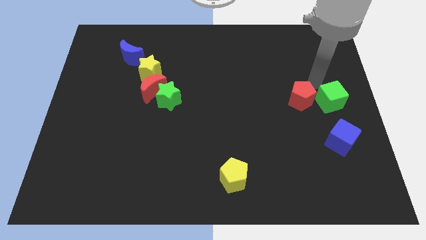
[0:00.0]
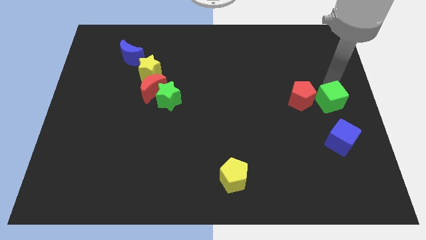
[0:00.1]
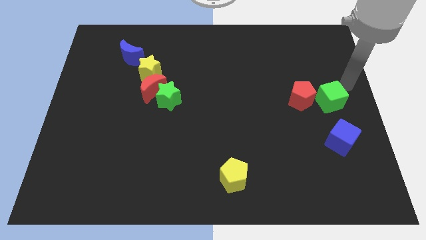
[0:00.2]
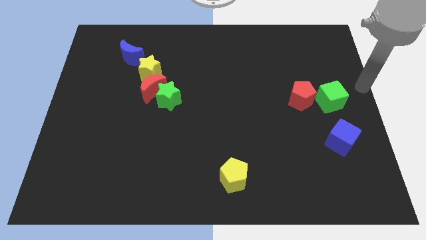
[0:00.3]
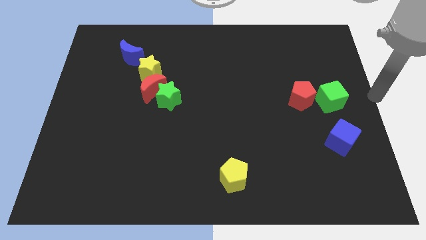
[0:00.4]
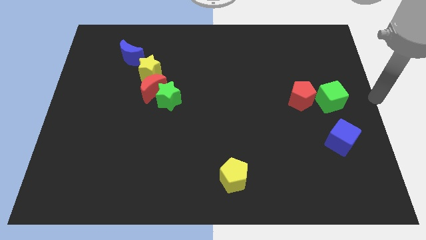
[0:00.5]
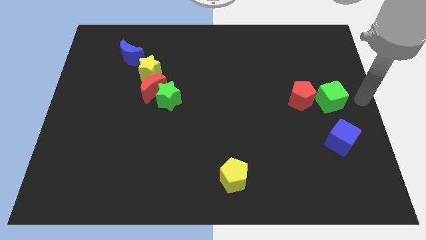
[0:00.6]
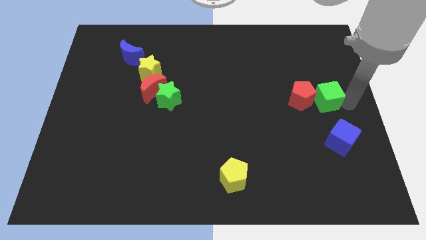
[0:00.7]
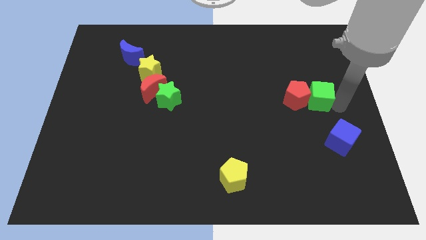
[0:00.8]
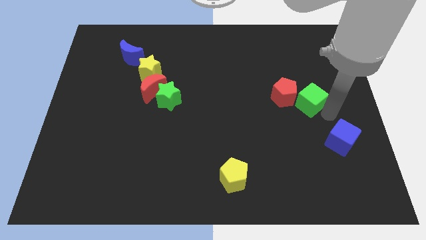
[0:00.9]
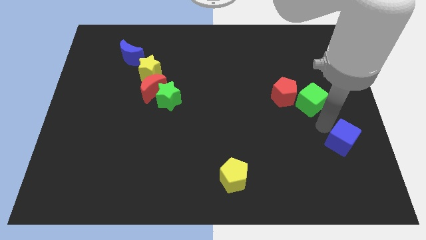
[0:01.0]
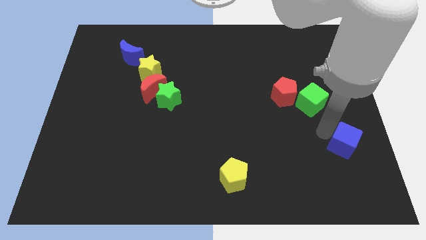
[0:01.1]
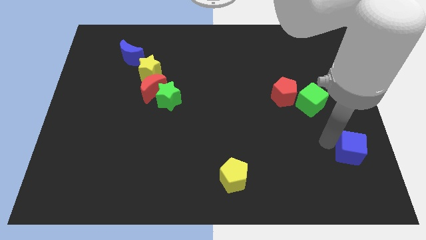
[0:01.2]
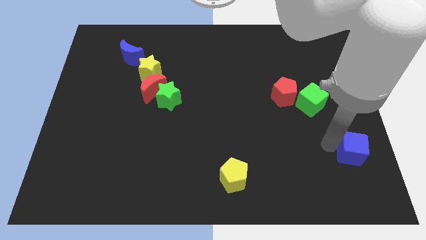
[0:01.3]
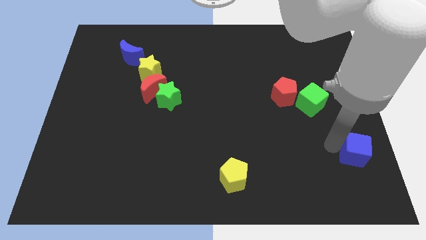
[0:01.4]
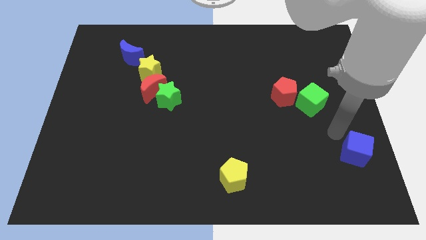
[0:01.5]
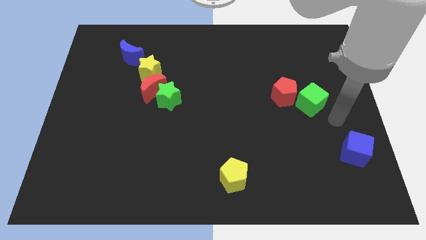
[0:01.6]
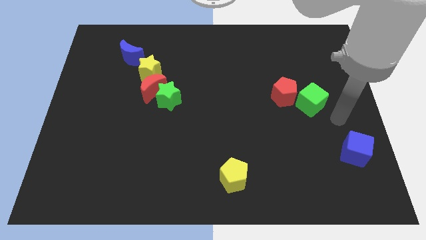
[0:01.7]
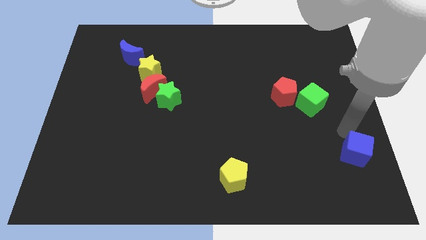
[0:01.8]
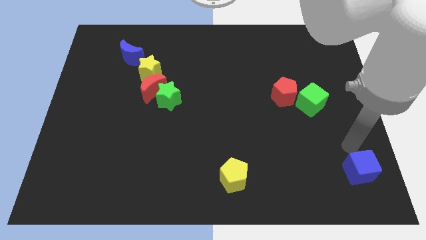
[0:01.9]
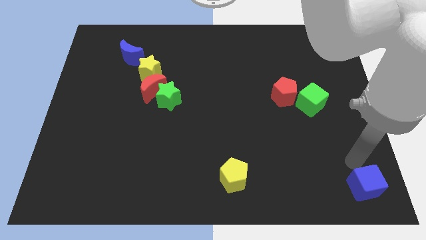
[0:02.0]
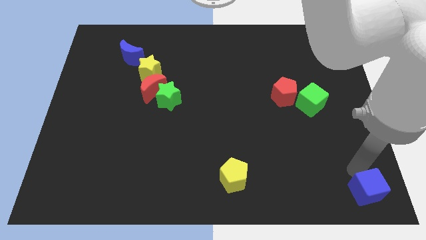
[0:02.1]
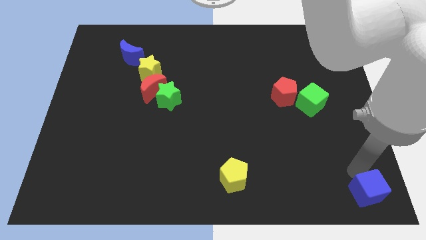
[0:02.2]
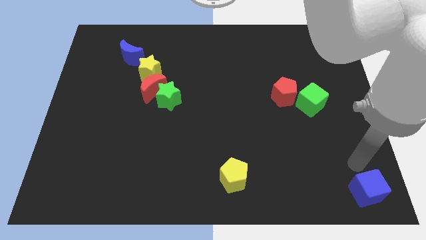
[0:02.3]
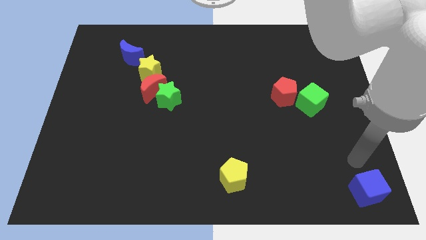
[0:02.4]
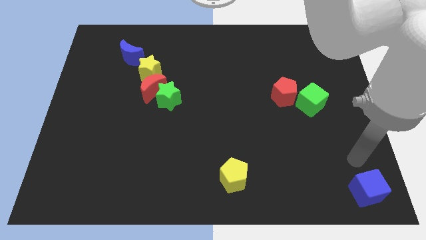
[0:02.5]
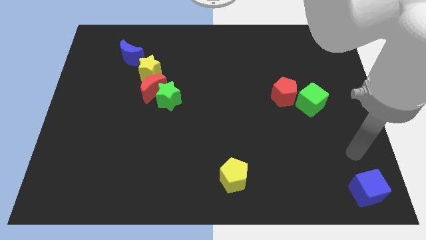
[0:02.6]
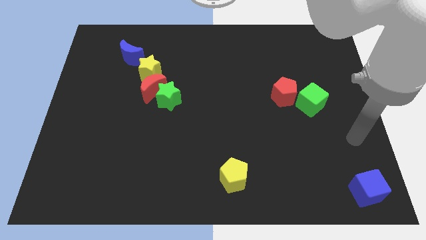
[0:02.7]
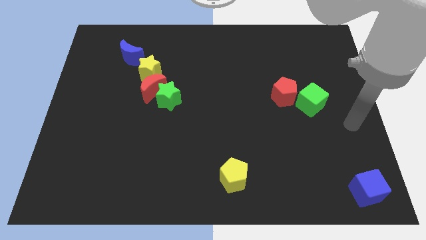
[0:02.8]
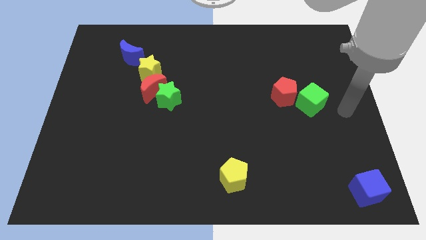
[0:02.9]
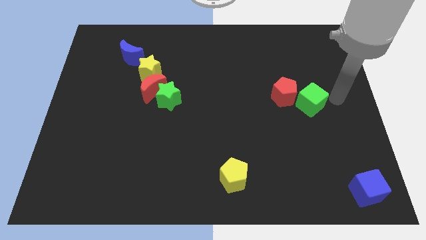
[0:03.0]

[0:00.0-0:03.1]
place the blue cube to the bottom right of the board

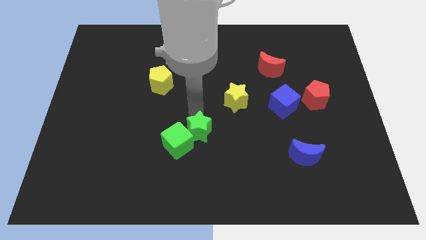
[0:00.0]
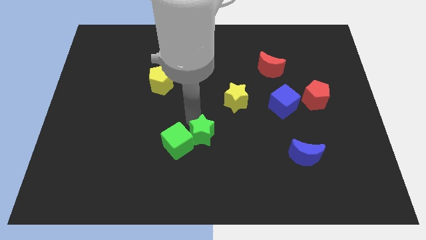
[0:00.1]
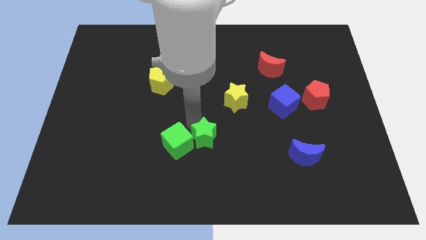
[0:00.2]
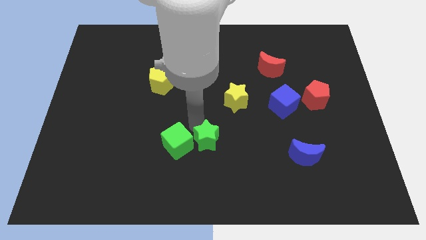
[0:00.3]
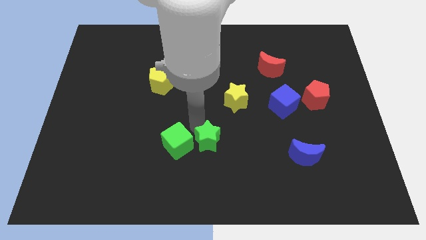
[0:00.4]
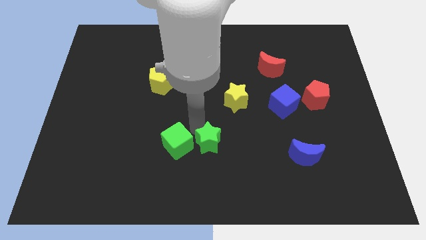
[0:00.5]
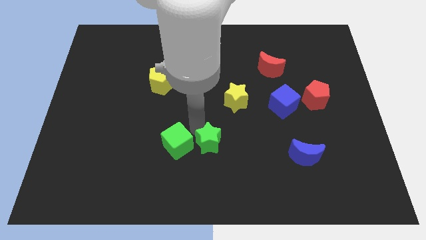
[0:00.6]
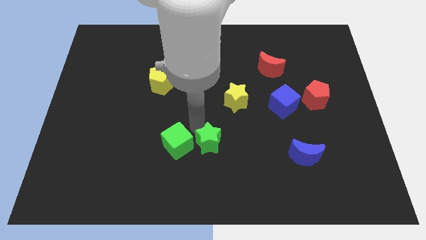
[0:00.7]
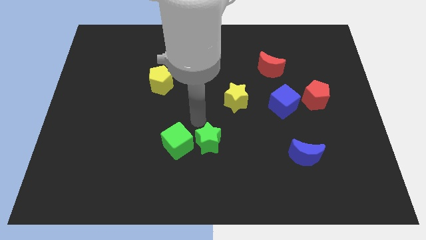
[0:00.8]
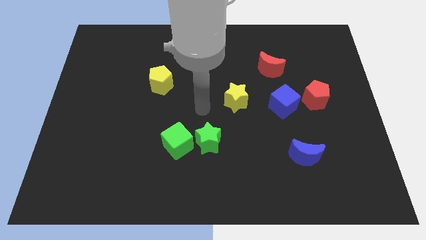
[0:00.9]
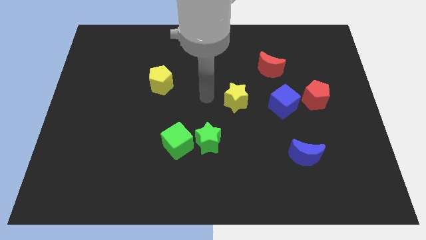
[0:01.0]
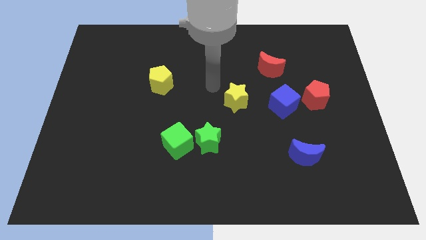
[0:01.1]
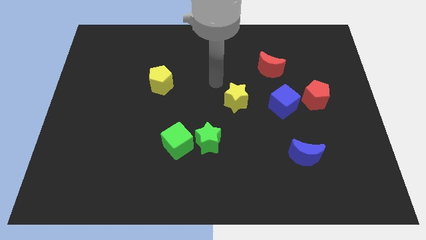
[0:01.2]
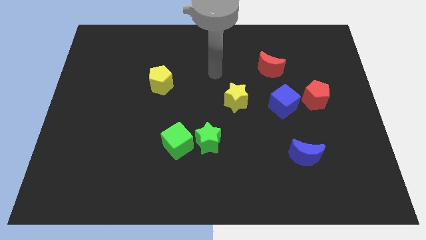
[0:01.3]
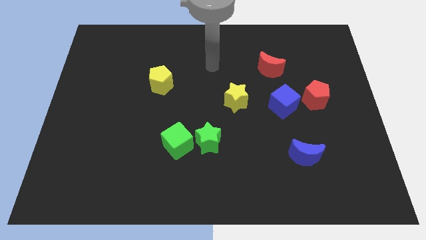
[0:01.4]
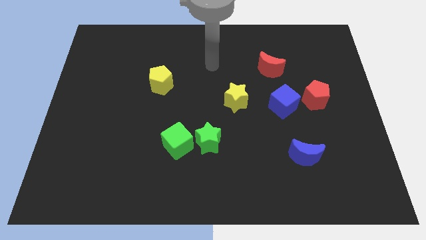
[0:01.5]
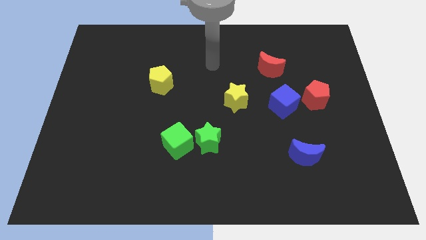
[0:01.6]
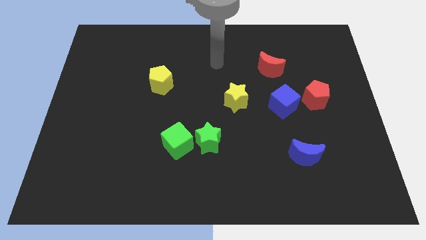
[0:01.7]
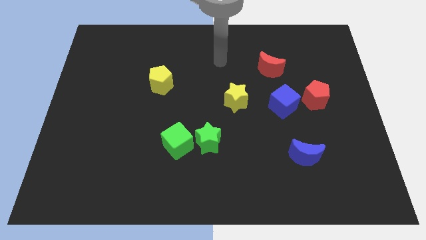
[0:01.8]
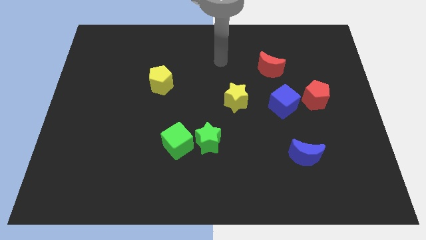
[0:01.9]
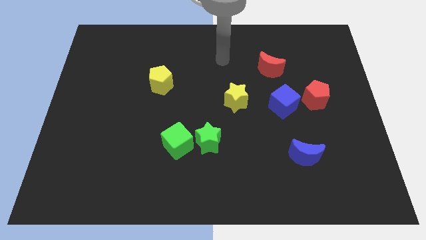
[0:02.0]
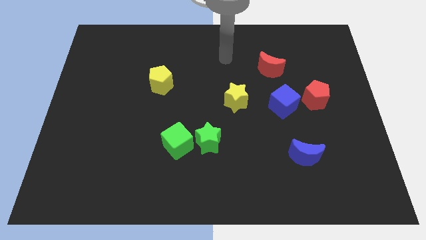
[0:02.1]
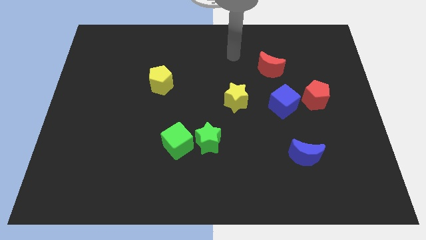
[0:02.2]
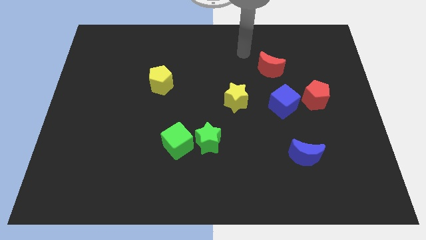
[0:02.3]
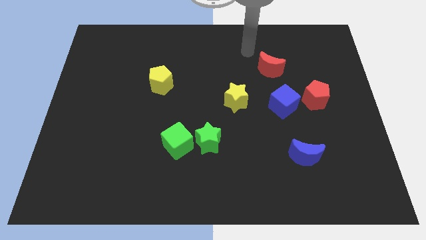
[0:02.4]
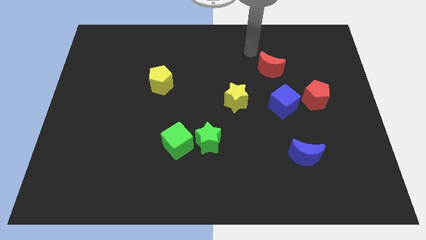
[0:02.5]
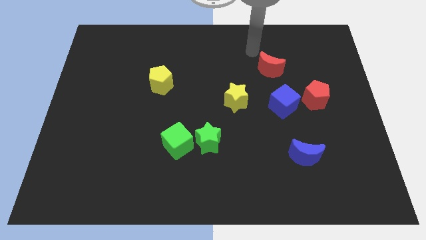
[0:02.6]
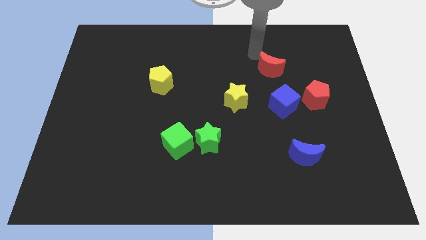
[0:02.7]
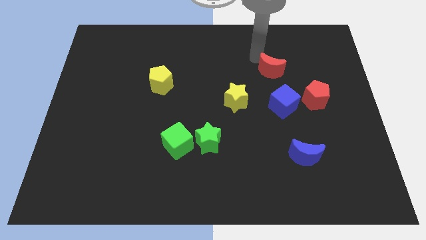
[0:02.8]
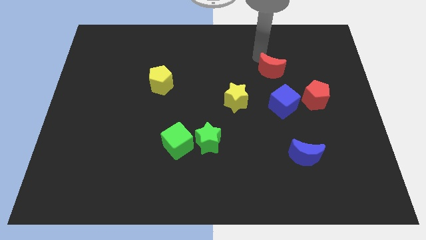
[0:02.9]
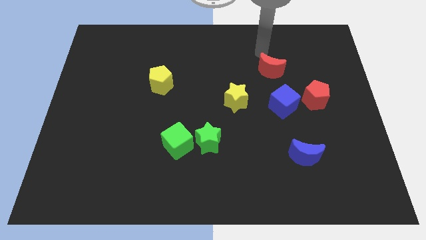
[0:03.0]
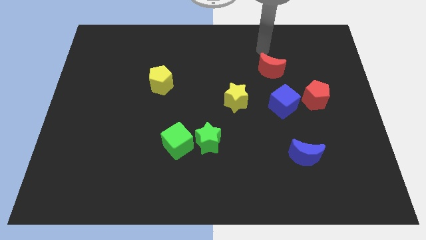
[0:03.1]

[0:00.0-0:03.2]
move your arm away from the green star

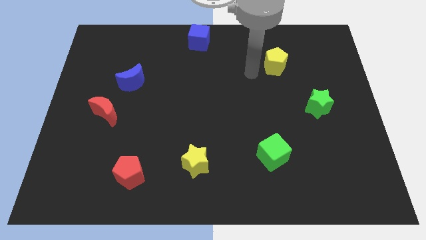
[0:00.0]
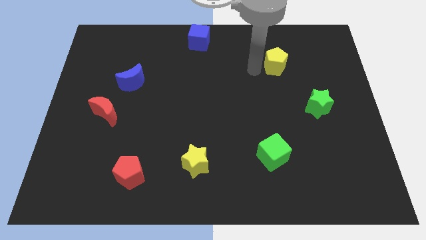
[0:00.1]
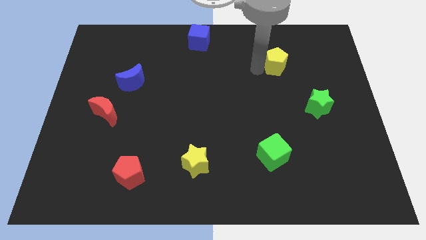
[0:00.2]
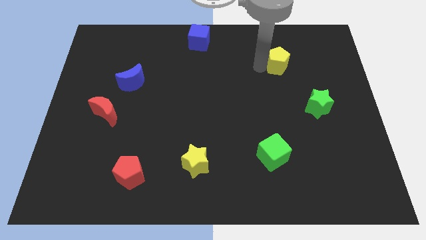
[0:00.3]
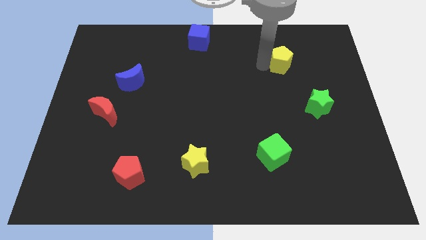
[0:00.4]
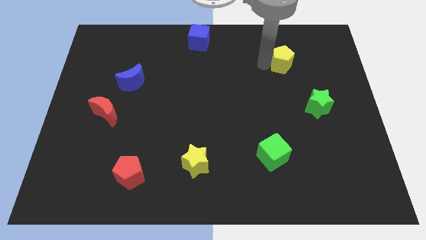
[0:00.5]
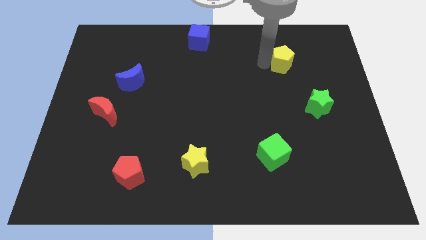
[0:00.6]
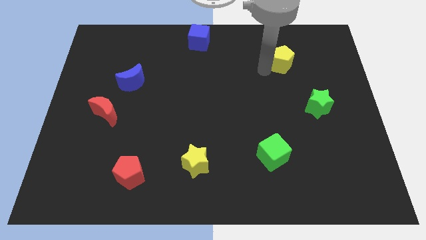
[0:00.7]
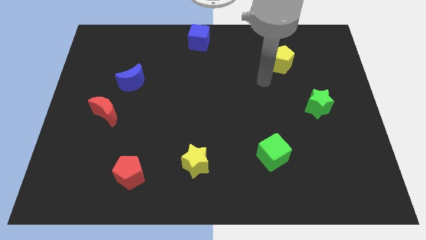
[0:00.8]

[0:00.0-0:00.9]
push the yellow pentagon slightly right

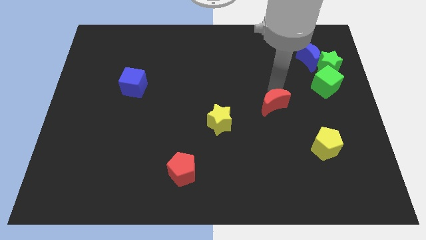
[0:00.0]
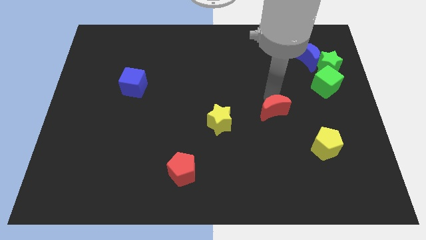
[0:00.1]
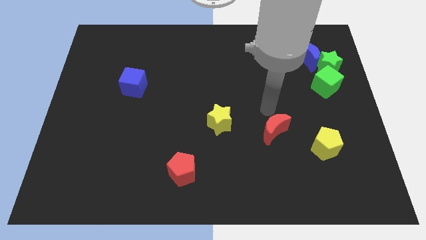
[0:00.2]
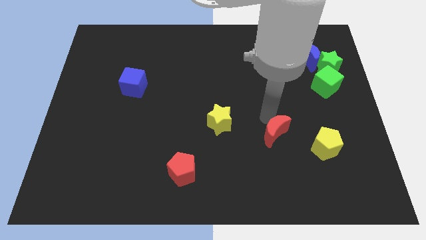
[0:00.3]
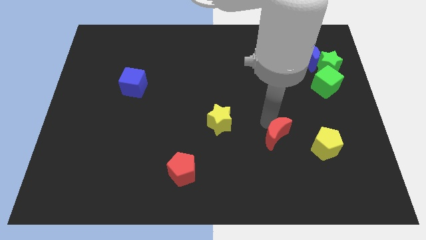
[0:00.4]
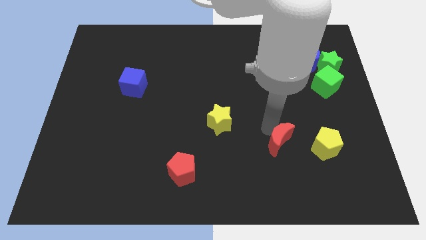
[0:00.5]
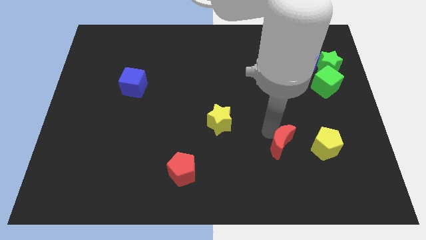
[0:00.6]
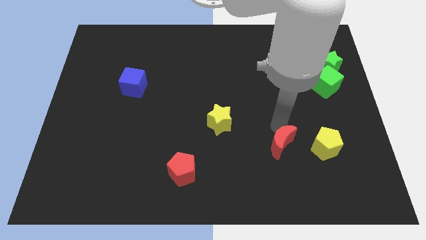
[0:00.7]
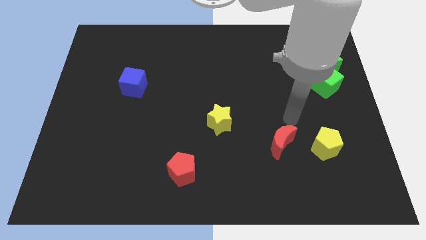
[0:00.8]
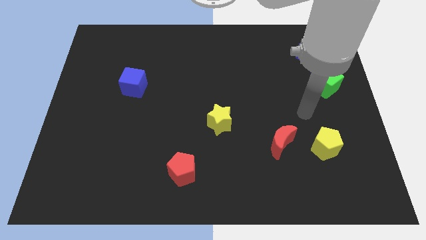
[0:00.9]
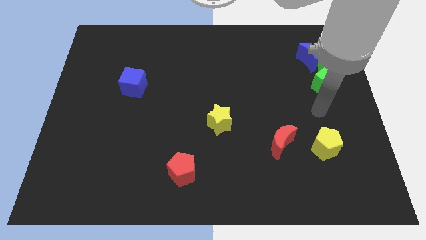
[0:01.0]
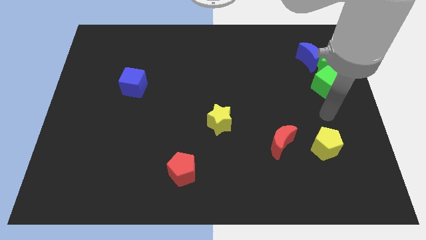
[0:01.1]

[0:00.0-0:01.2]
push the red moon to the downwards

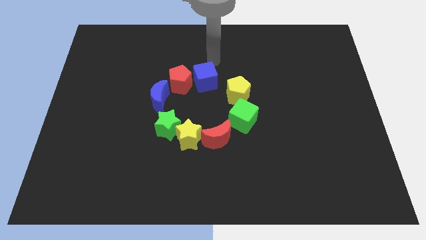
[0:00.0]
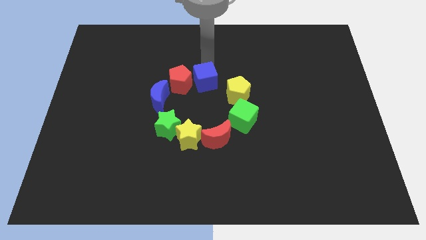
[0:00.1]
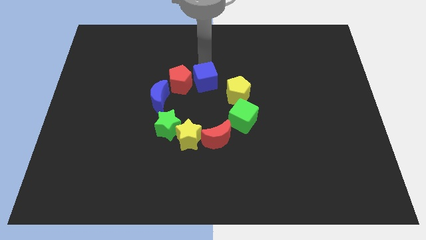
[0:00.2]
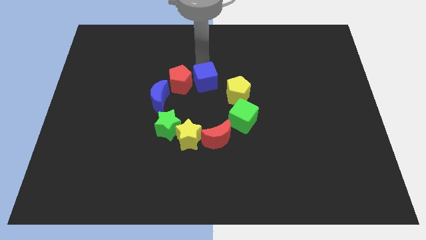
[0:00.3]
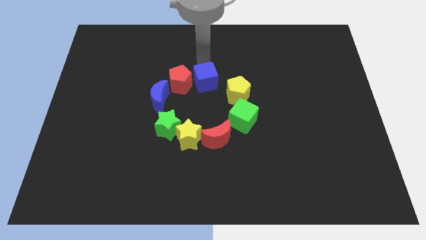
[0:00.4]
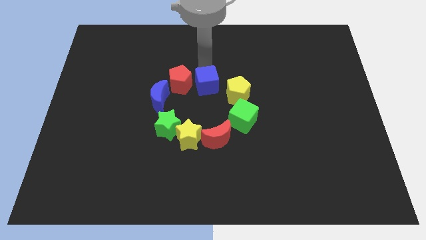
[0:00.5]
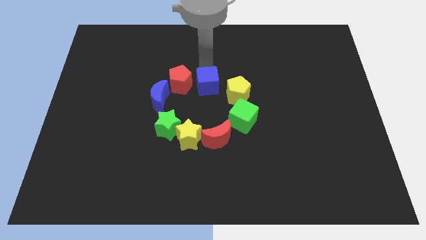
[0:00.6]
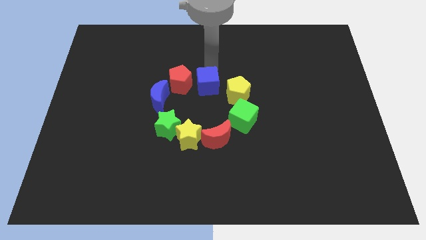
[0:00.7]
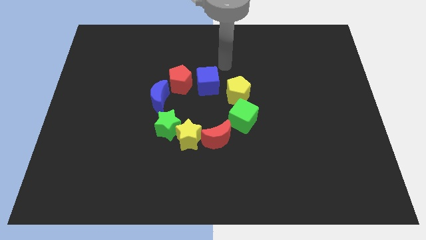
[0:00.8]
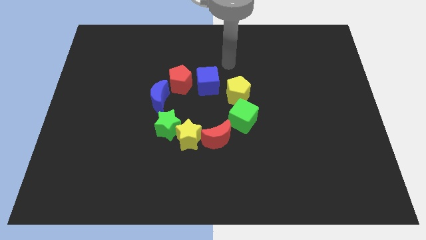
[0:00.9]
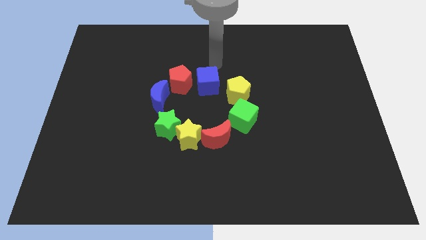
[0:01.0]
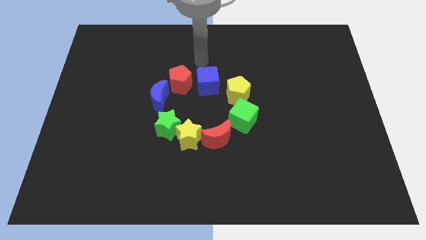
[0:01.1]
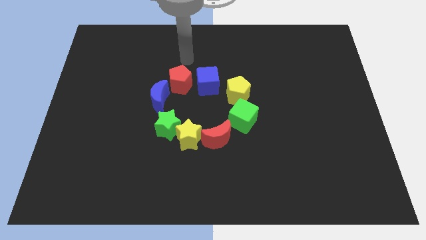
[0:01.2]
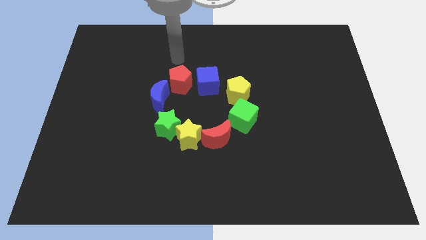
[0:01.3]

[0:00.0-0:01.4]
slightly move the blue cube downwards
